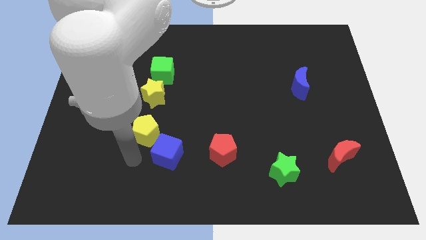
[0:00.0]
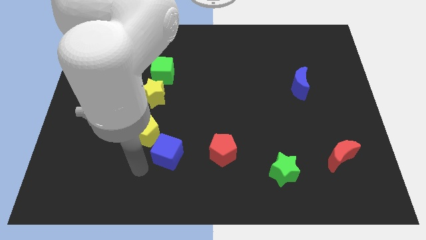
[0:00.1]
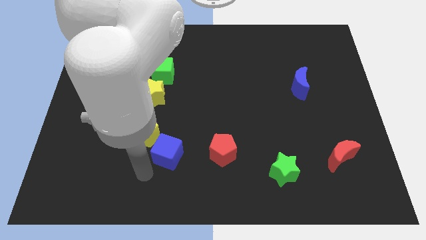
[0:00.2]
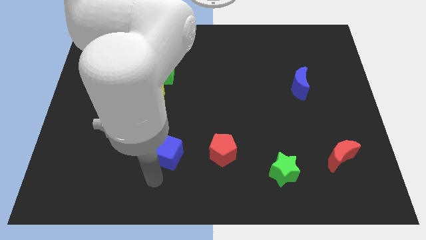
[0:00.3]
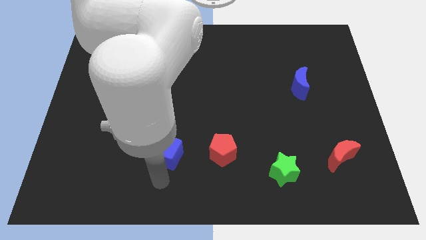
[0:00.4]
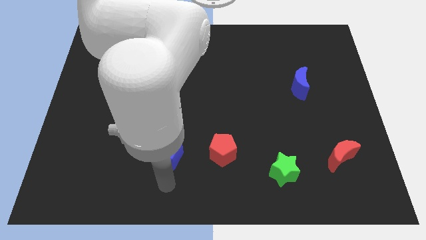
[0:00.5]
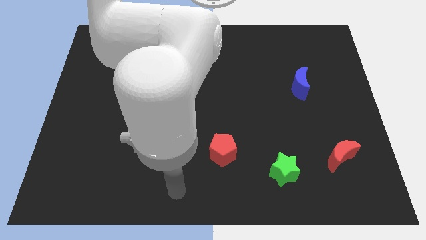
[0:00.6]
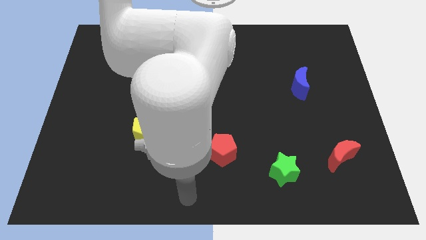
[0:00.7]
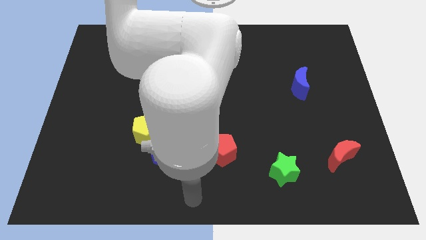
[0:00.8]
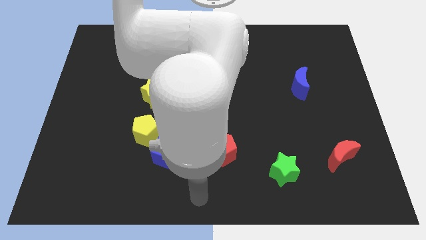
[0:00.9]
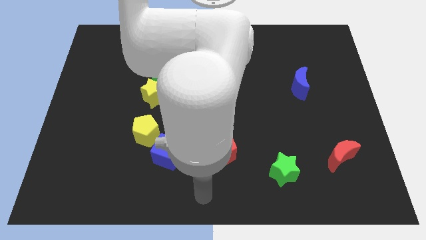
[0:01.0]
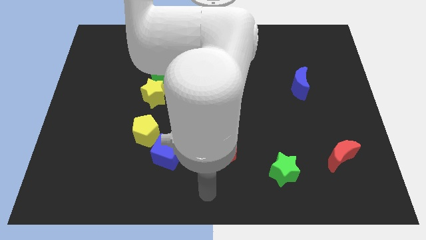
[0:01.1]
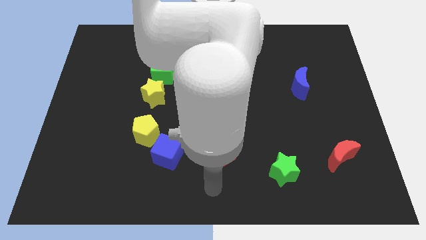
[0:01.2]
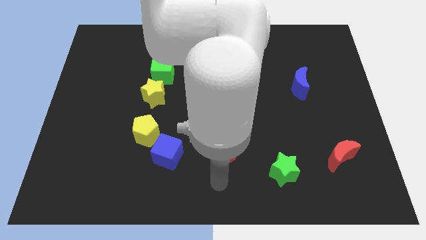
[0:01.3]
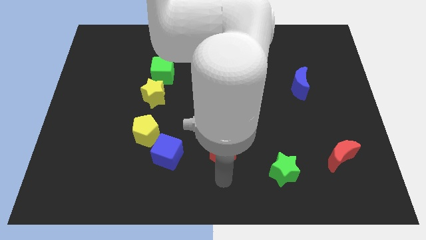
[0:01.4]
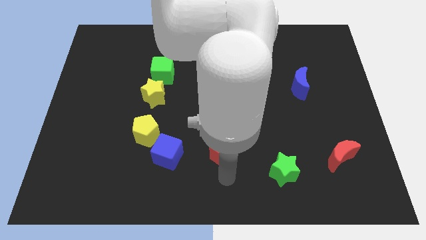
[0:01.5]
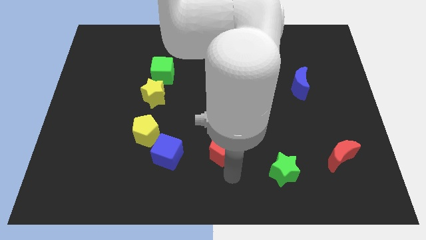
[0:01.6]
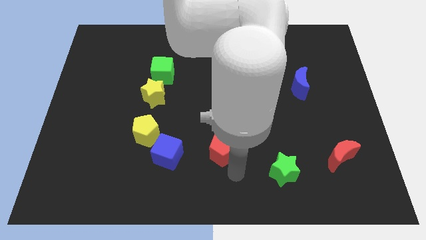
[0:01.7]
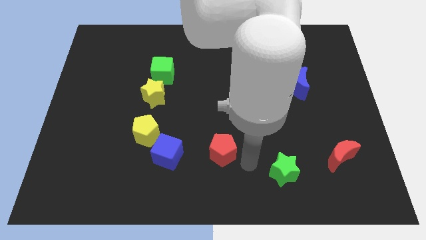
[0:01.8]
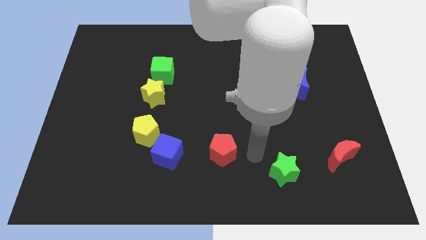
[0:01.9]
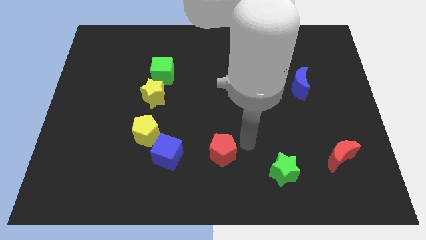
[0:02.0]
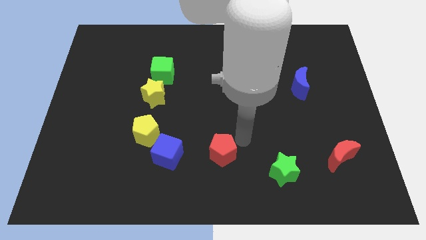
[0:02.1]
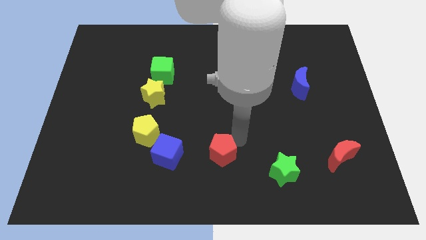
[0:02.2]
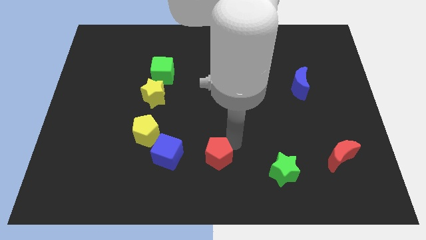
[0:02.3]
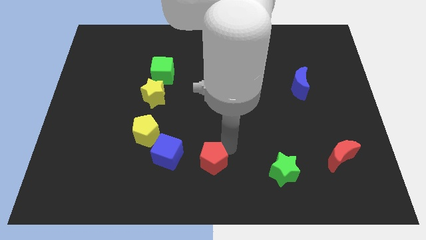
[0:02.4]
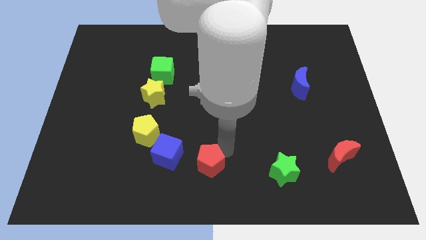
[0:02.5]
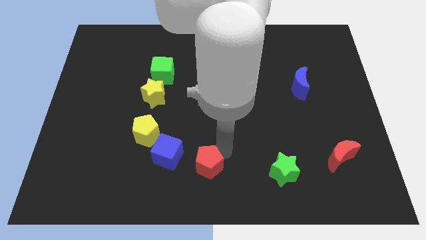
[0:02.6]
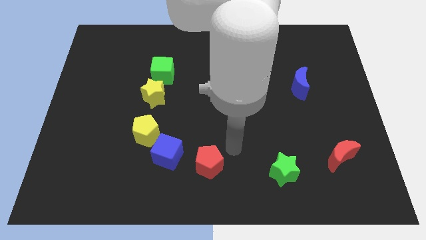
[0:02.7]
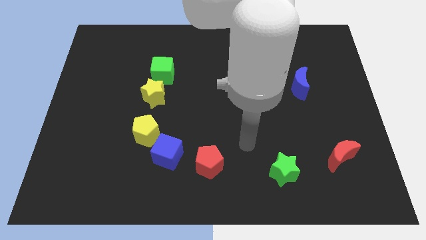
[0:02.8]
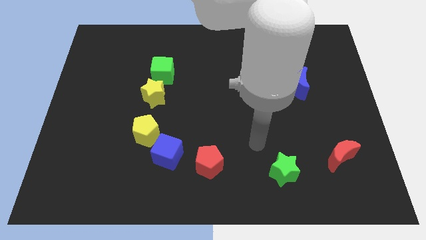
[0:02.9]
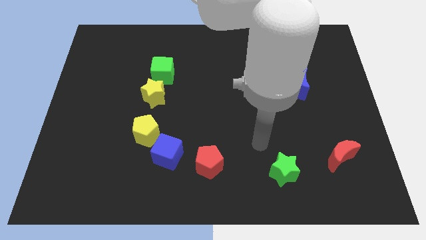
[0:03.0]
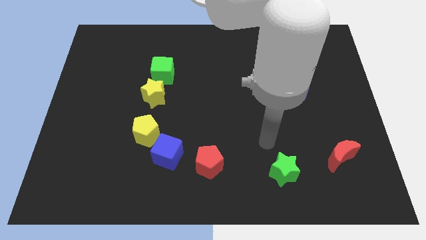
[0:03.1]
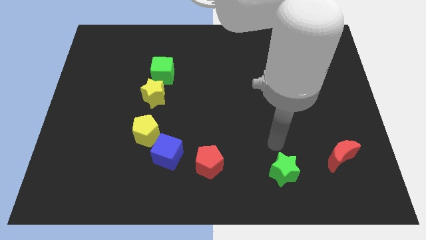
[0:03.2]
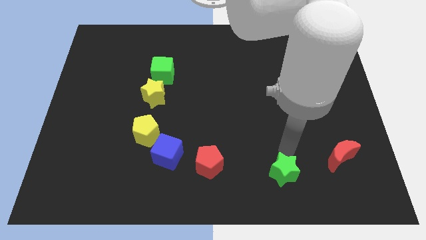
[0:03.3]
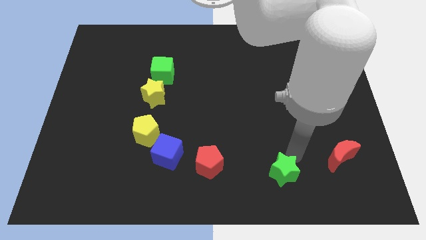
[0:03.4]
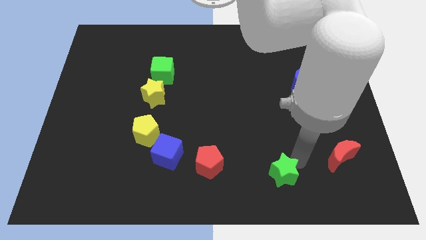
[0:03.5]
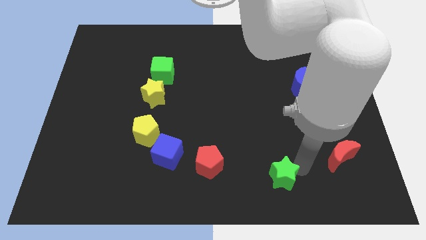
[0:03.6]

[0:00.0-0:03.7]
slide the red pentagon to the bottom center of the board

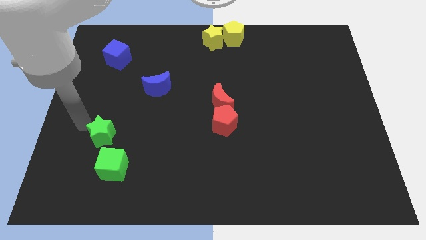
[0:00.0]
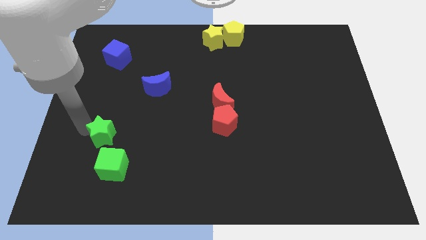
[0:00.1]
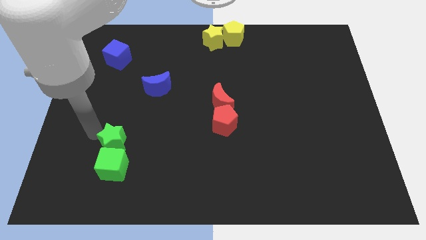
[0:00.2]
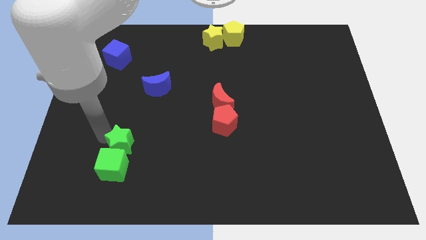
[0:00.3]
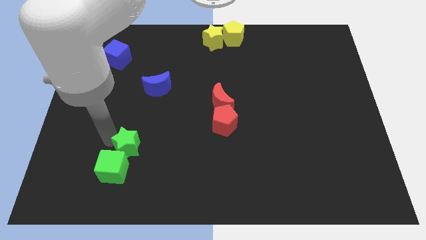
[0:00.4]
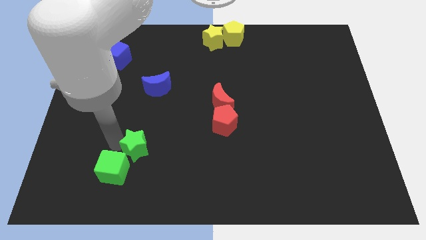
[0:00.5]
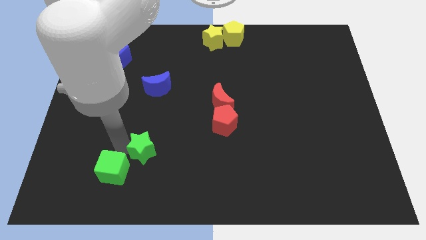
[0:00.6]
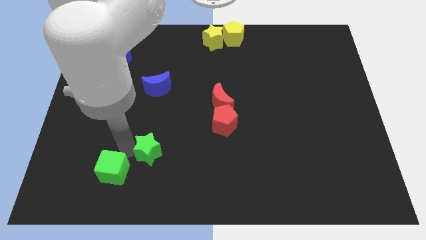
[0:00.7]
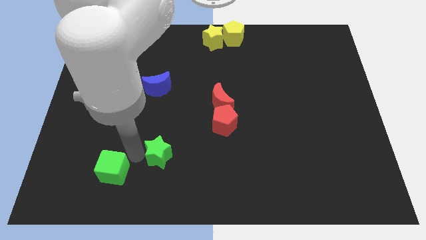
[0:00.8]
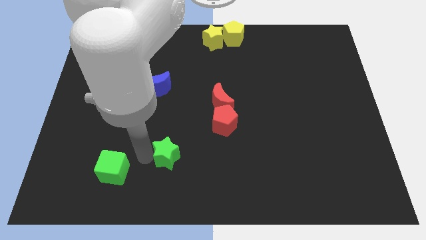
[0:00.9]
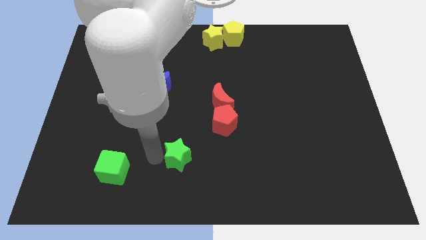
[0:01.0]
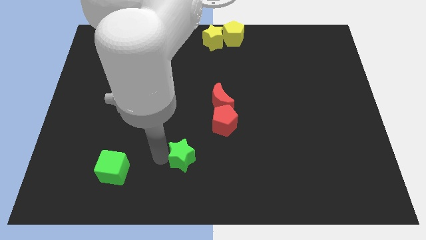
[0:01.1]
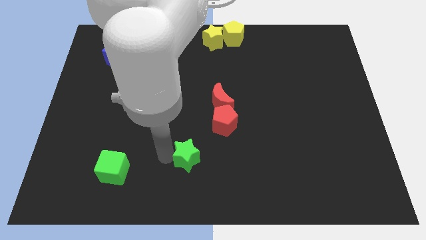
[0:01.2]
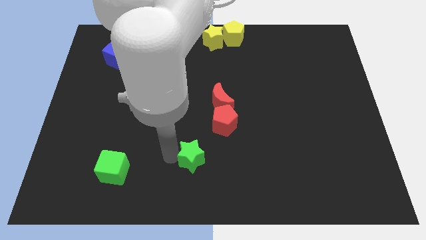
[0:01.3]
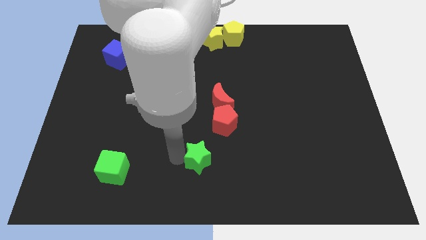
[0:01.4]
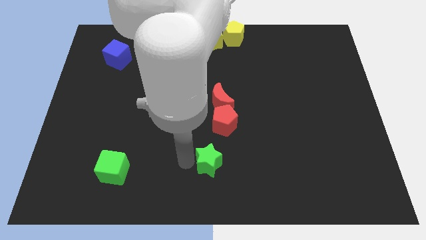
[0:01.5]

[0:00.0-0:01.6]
separate both the green blocks

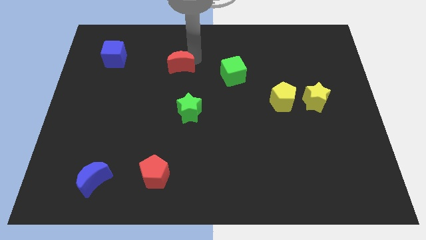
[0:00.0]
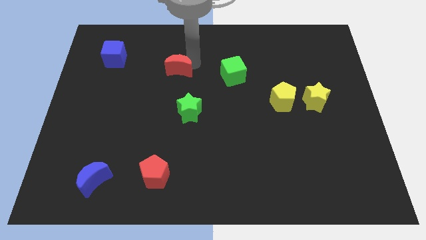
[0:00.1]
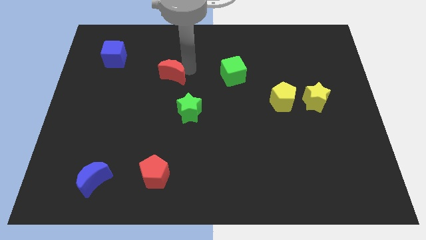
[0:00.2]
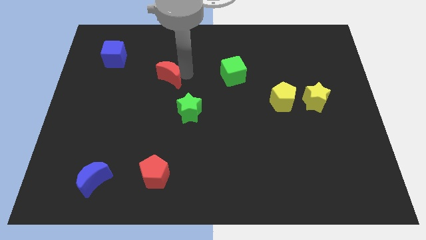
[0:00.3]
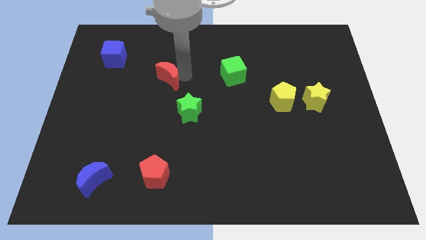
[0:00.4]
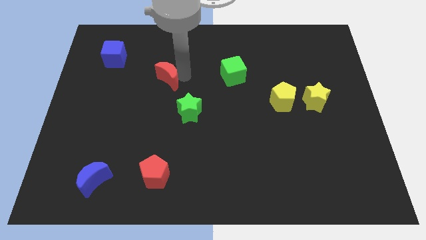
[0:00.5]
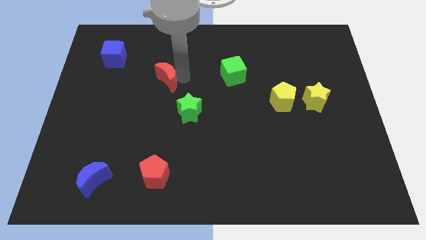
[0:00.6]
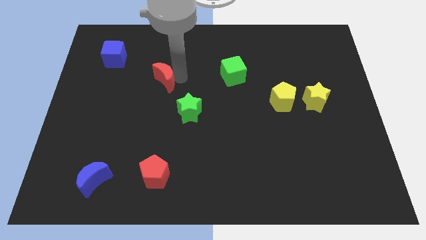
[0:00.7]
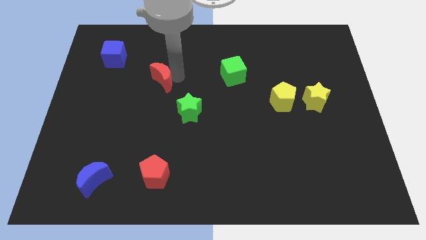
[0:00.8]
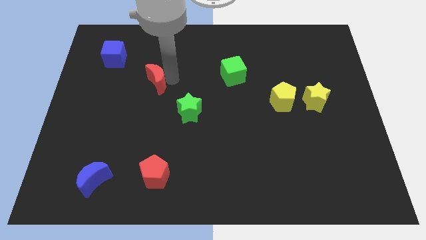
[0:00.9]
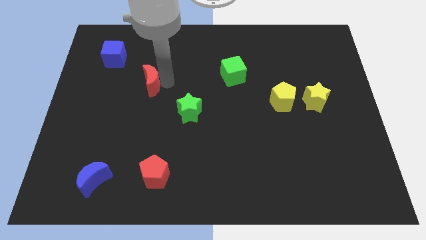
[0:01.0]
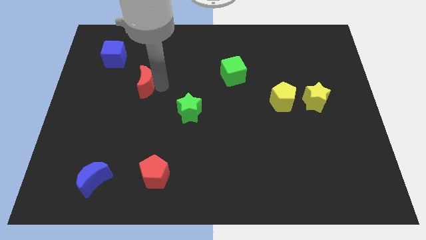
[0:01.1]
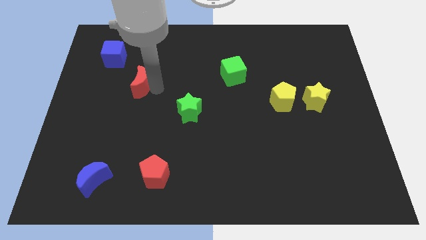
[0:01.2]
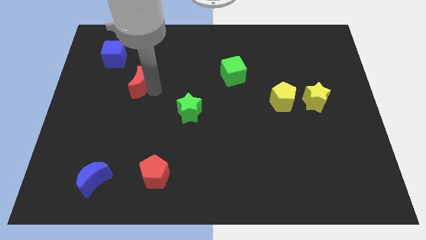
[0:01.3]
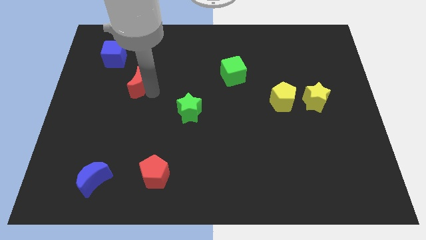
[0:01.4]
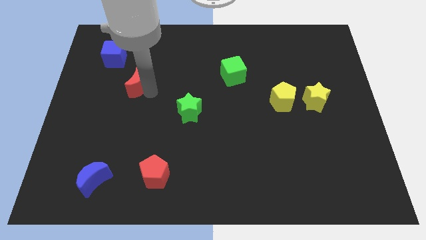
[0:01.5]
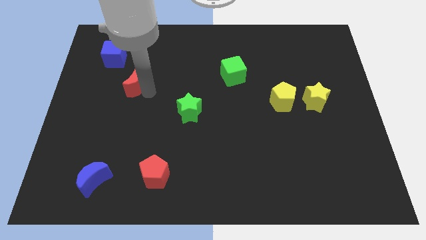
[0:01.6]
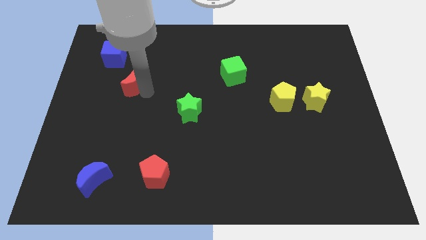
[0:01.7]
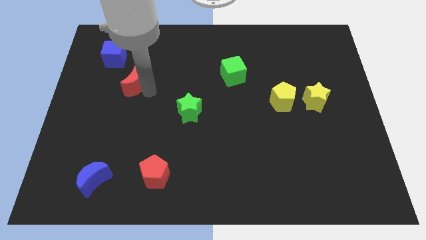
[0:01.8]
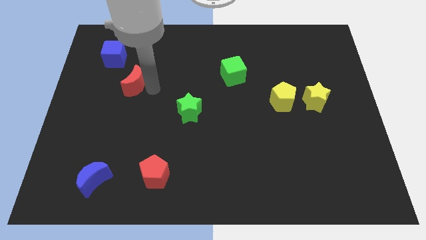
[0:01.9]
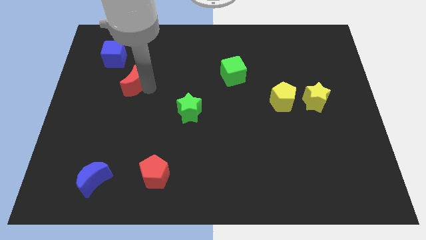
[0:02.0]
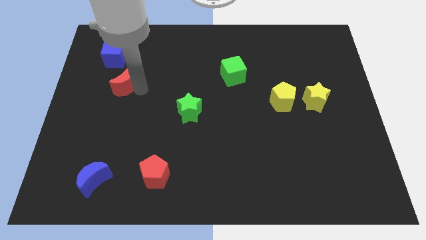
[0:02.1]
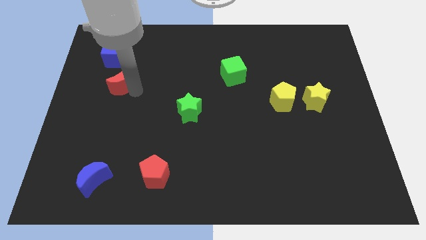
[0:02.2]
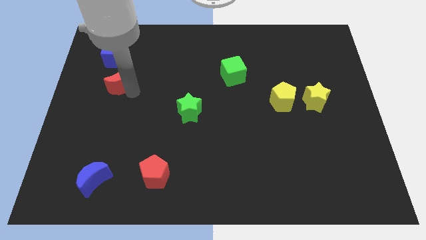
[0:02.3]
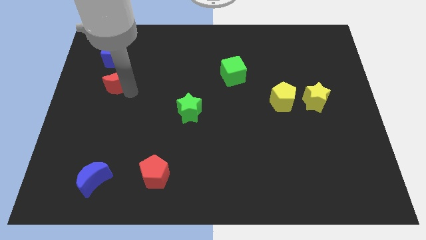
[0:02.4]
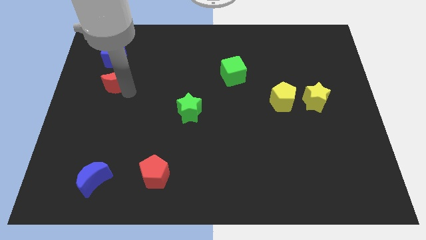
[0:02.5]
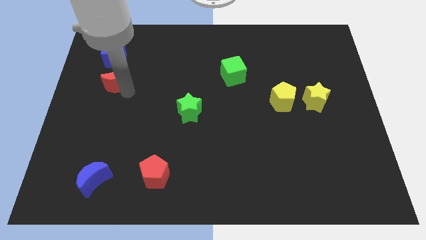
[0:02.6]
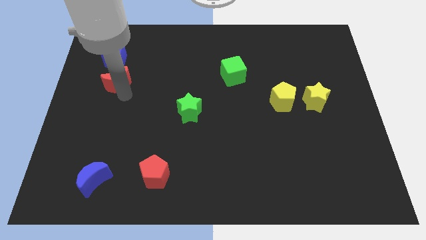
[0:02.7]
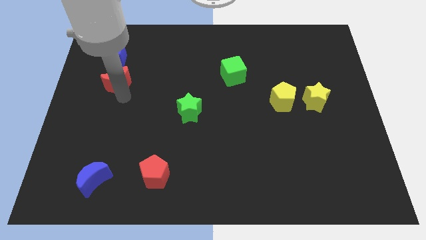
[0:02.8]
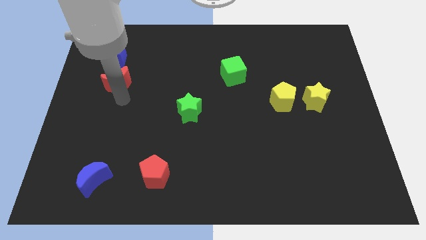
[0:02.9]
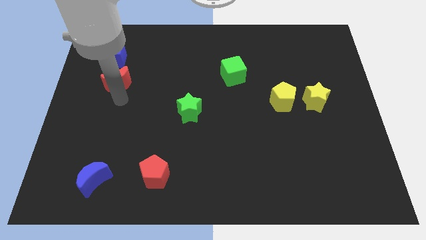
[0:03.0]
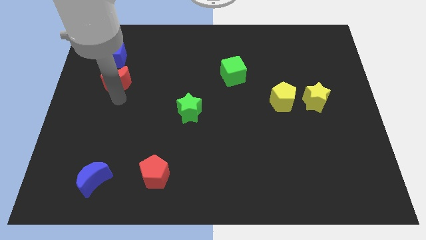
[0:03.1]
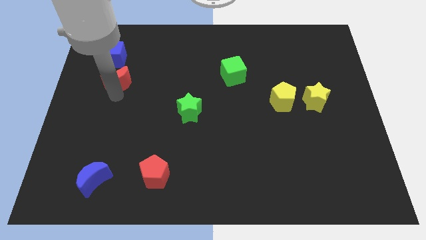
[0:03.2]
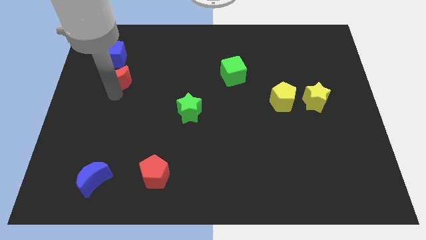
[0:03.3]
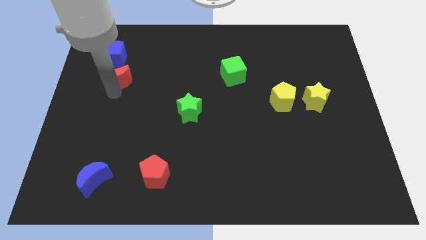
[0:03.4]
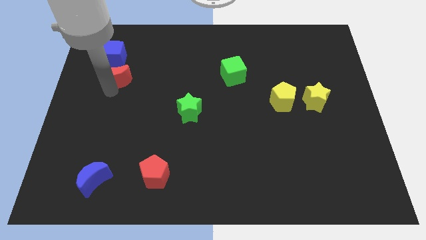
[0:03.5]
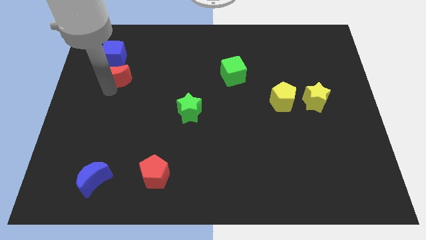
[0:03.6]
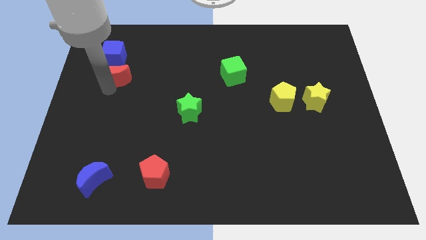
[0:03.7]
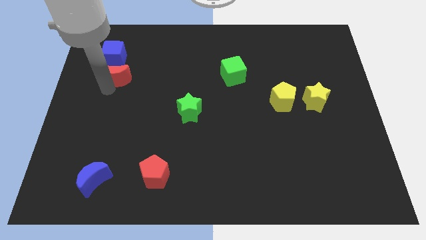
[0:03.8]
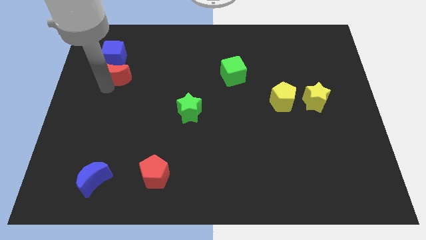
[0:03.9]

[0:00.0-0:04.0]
place the red moon at the bottom of the blue cube
